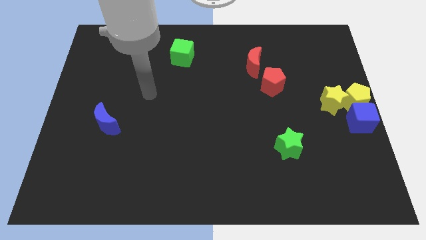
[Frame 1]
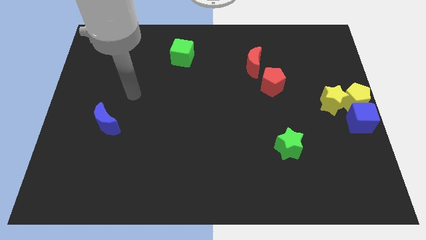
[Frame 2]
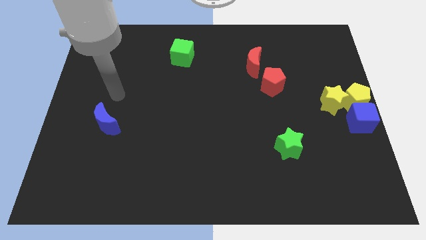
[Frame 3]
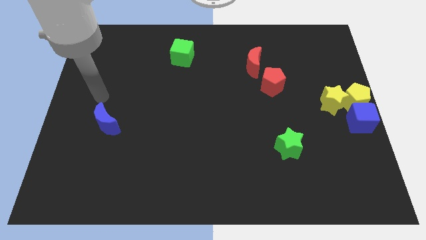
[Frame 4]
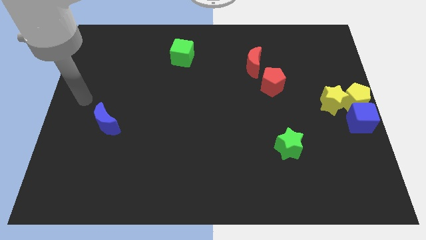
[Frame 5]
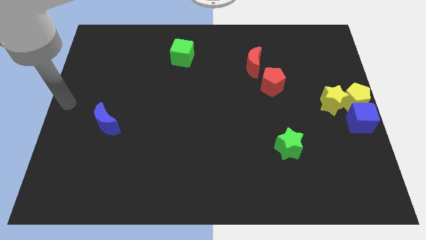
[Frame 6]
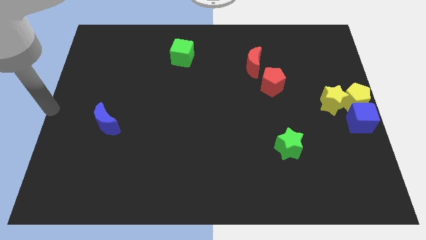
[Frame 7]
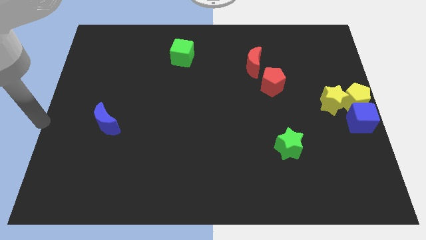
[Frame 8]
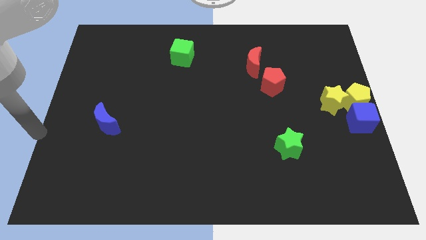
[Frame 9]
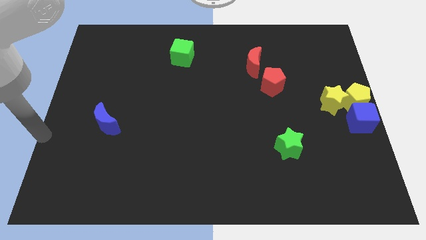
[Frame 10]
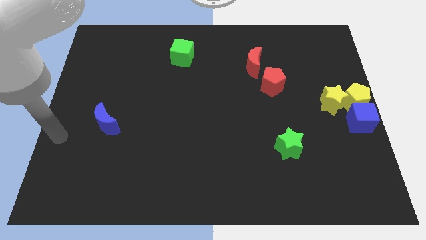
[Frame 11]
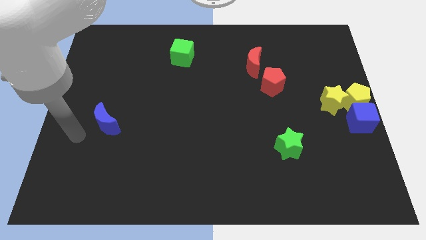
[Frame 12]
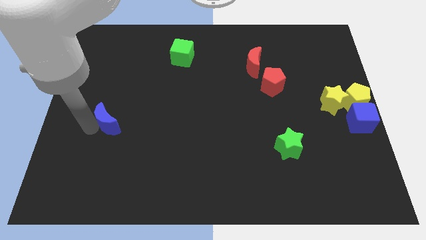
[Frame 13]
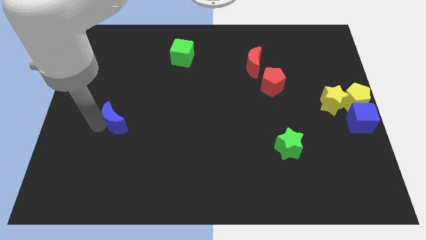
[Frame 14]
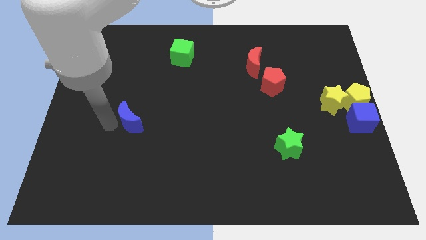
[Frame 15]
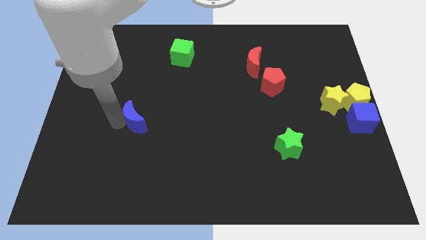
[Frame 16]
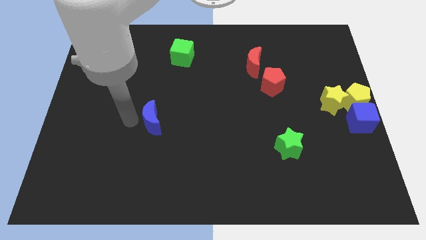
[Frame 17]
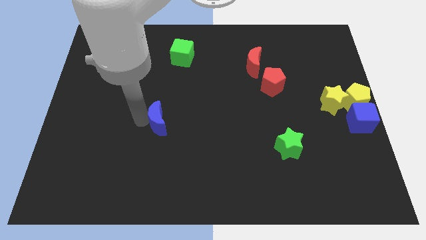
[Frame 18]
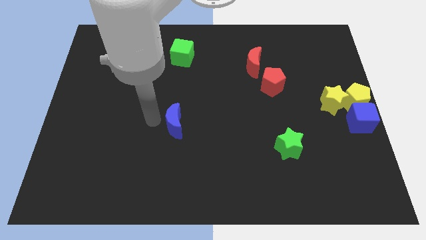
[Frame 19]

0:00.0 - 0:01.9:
place the blue moon vertically below the green cube

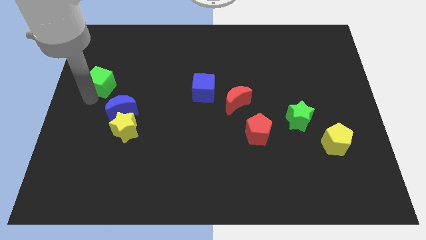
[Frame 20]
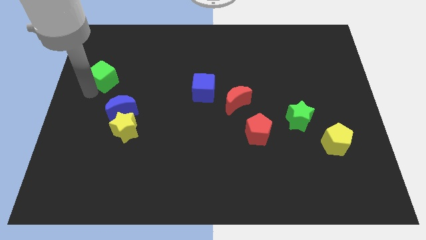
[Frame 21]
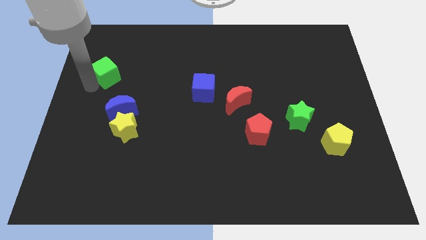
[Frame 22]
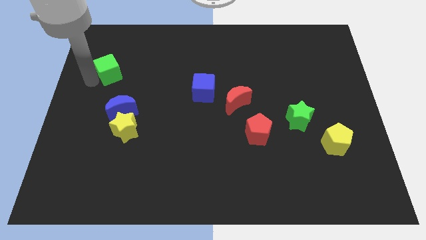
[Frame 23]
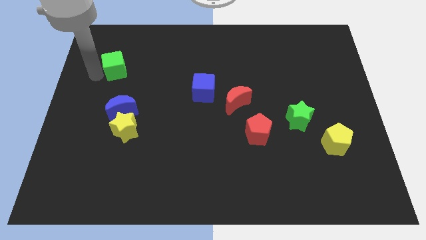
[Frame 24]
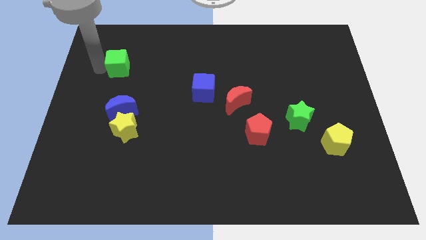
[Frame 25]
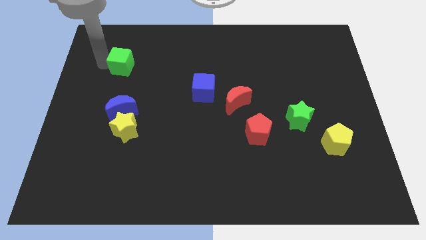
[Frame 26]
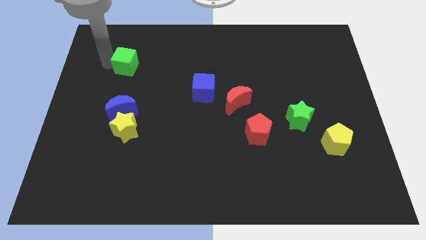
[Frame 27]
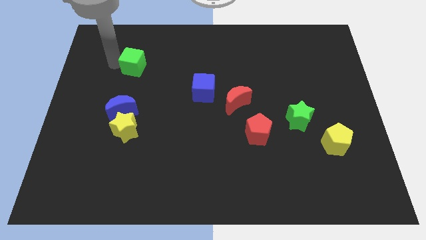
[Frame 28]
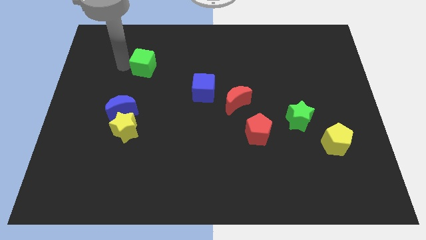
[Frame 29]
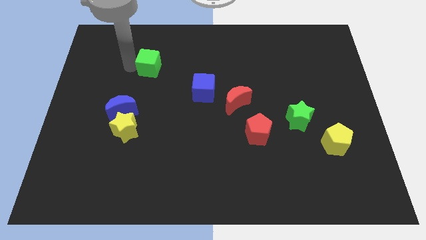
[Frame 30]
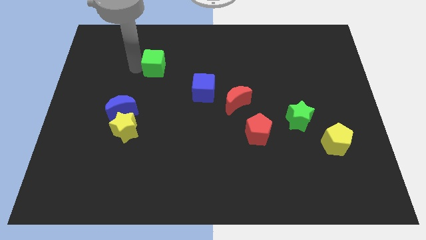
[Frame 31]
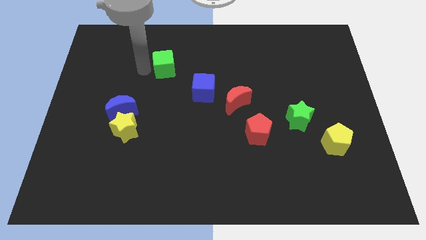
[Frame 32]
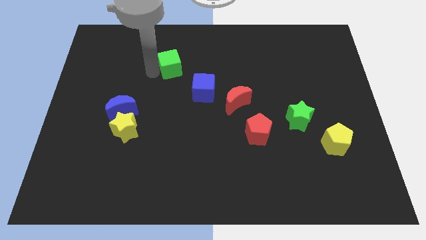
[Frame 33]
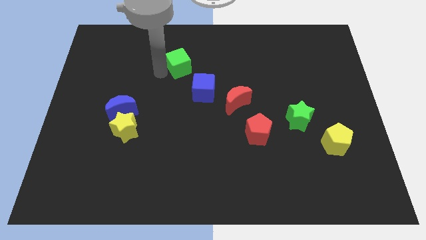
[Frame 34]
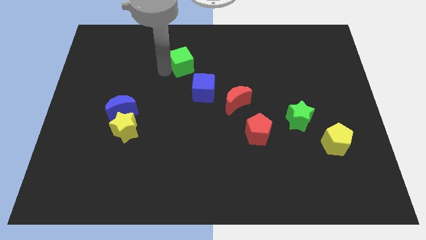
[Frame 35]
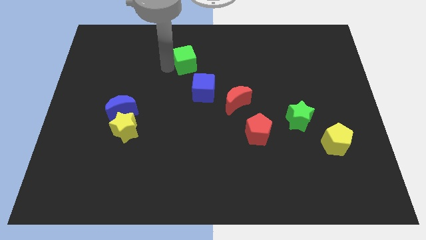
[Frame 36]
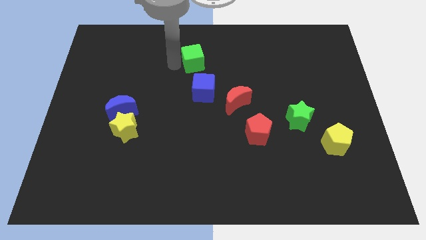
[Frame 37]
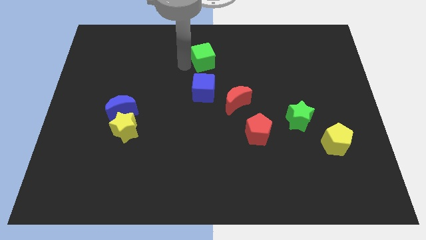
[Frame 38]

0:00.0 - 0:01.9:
push the green cube to top of the blue cube

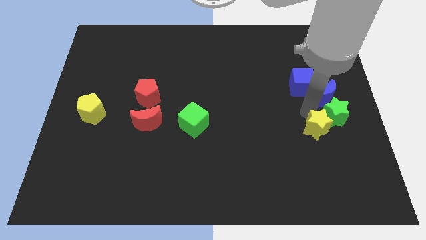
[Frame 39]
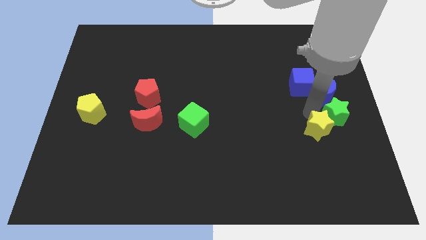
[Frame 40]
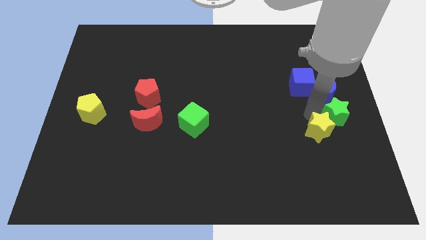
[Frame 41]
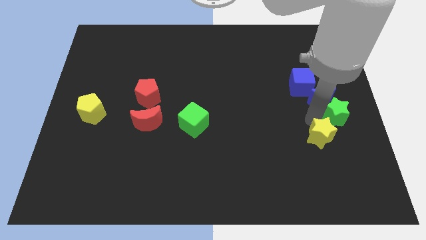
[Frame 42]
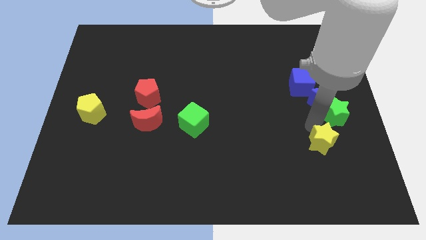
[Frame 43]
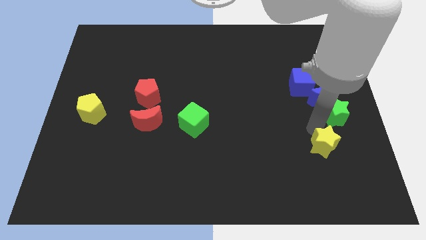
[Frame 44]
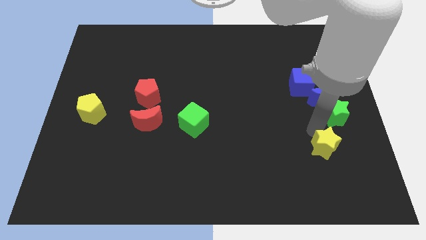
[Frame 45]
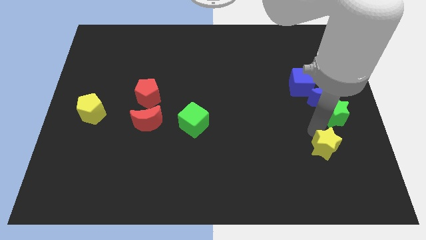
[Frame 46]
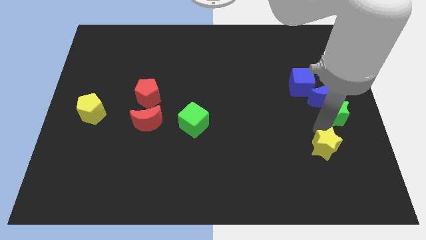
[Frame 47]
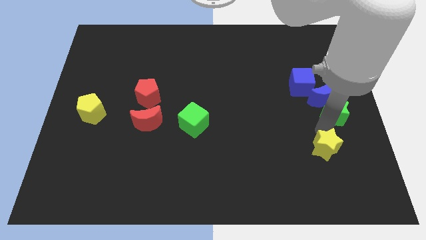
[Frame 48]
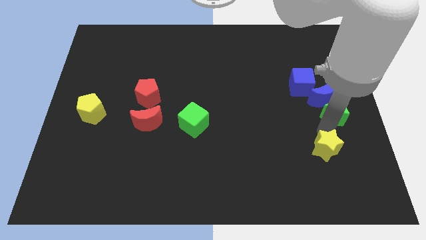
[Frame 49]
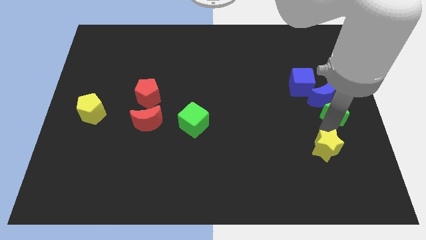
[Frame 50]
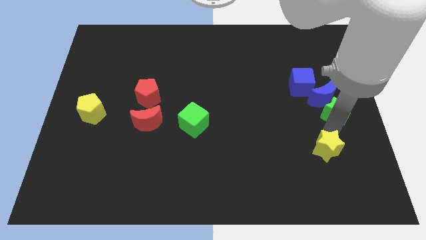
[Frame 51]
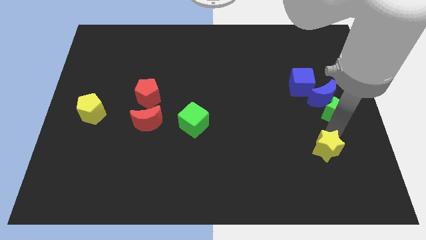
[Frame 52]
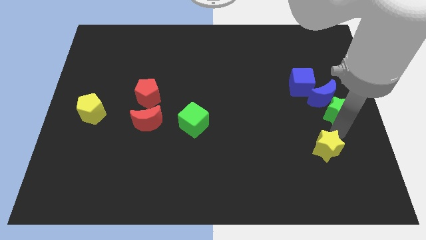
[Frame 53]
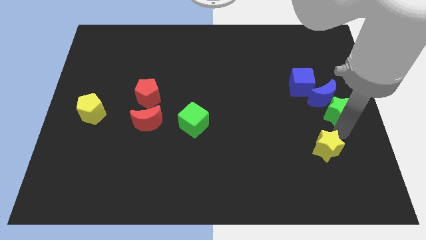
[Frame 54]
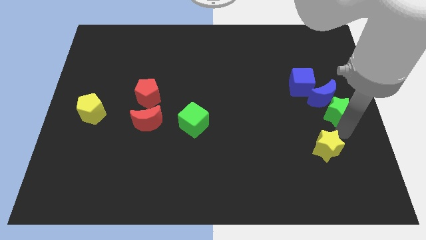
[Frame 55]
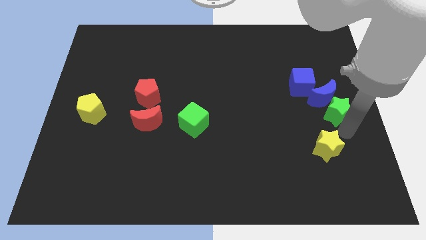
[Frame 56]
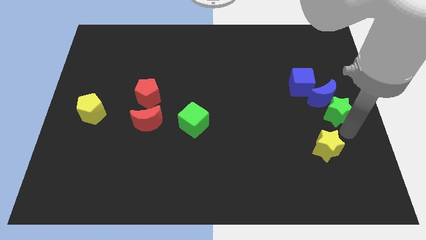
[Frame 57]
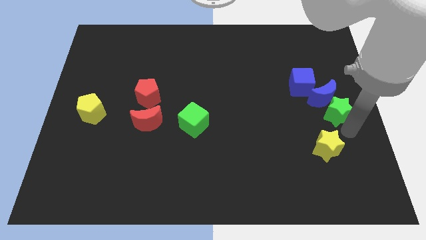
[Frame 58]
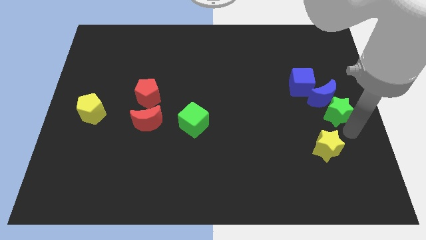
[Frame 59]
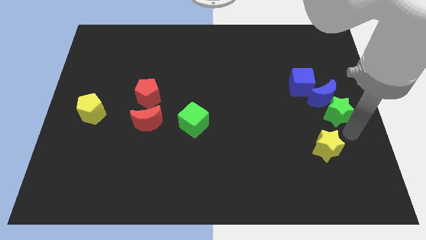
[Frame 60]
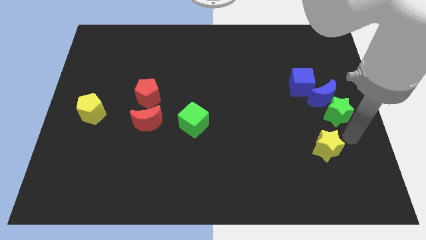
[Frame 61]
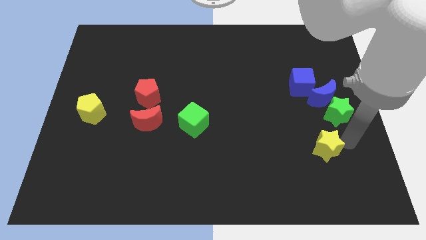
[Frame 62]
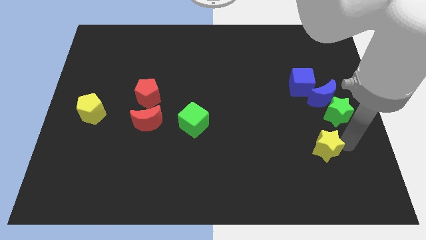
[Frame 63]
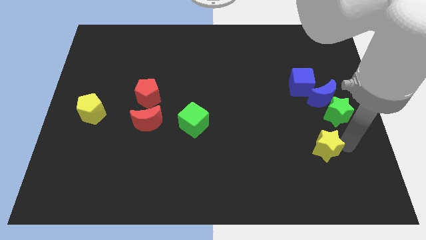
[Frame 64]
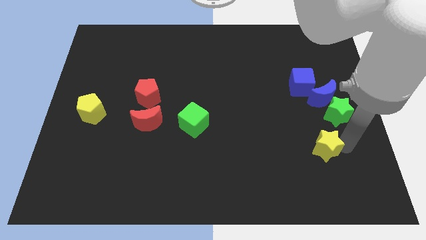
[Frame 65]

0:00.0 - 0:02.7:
separate the yellow star from the green star

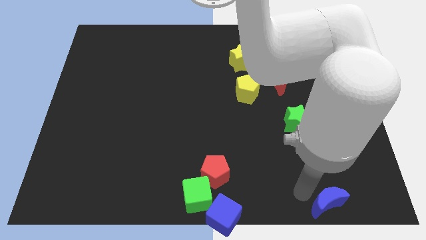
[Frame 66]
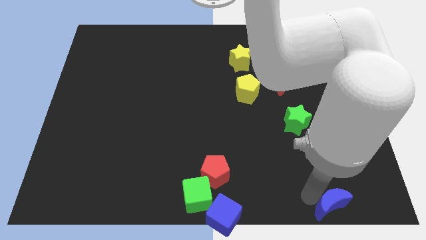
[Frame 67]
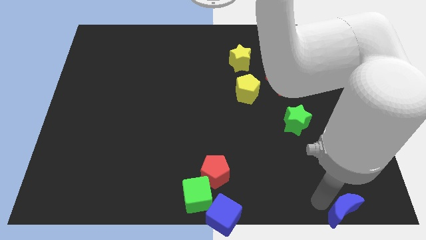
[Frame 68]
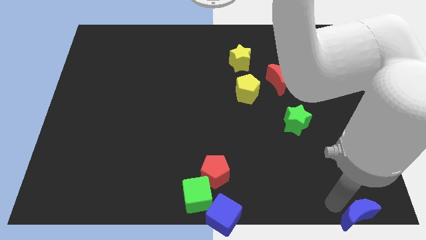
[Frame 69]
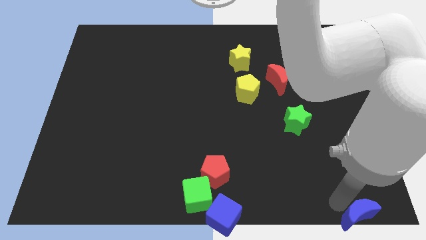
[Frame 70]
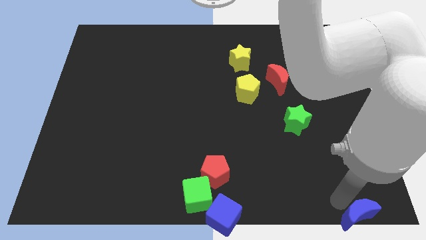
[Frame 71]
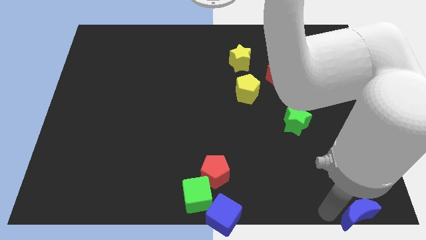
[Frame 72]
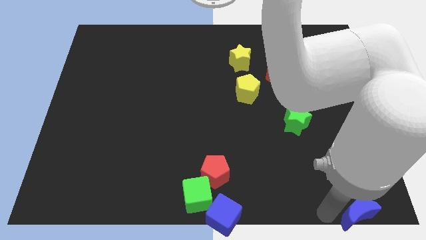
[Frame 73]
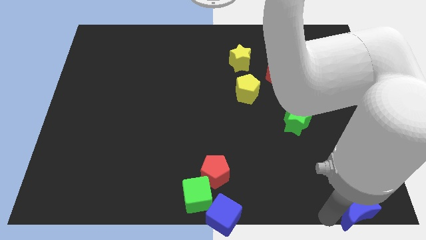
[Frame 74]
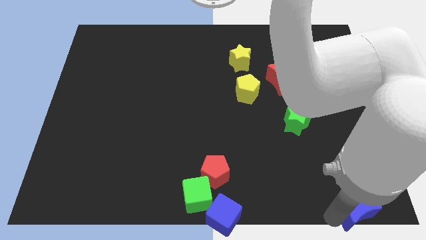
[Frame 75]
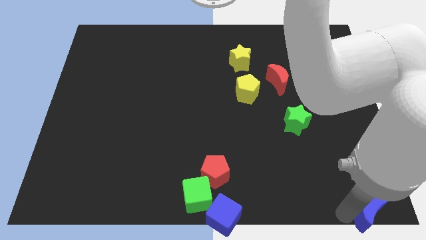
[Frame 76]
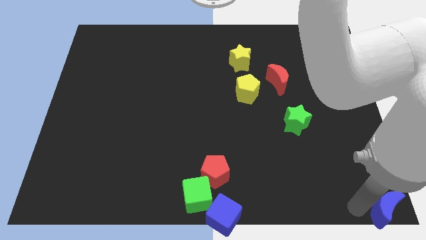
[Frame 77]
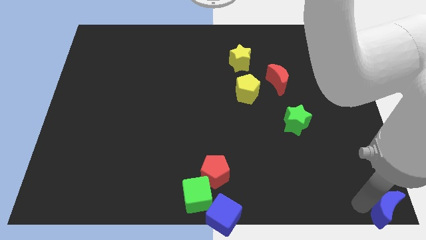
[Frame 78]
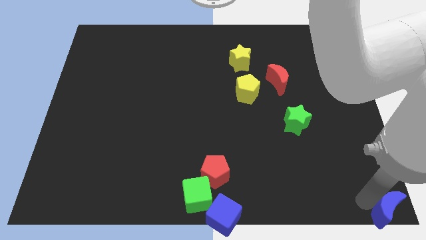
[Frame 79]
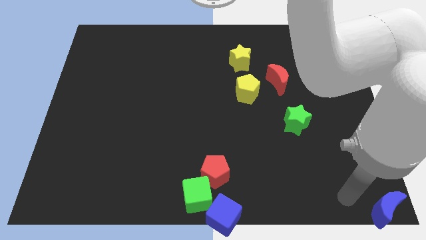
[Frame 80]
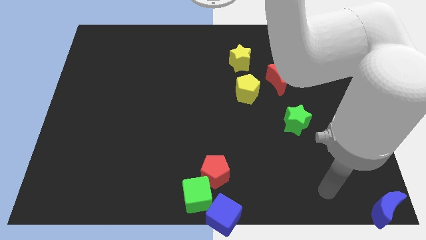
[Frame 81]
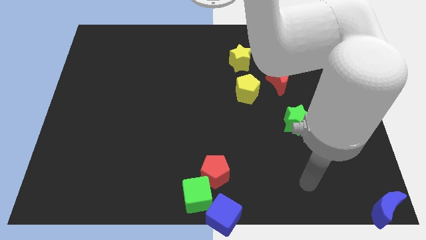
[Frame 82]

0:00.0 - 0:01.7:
push the blue crescent towards the bottom right of the board

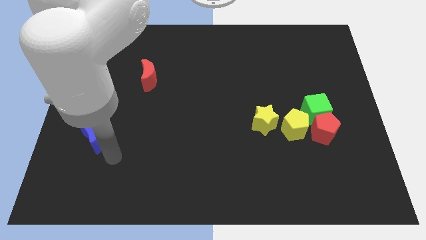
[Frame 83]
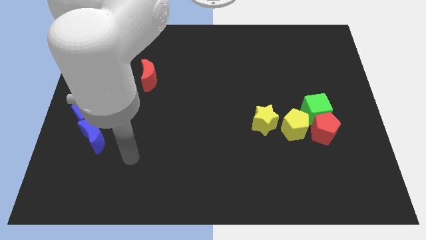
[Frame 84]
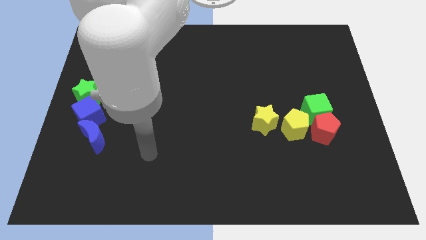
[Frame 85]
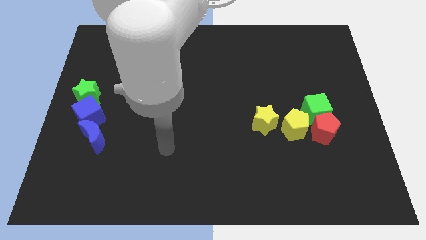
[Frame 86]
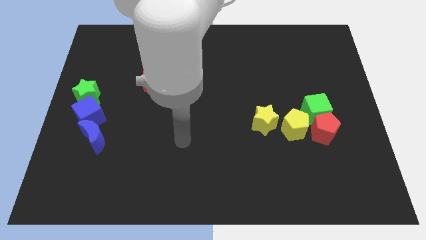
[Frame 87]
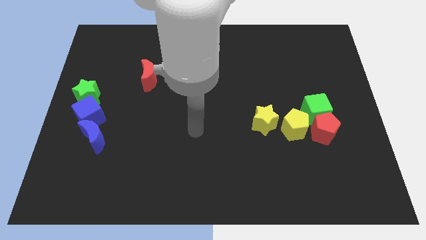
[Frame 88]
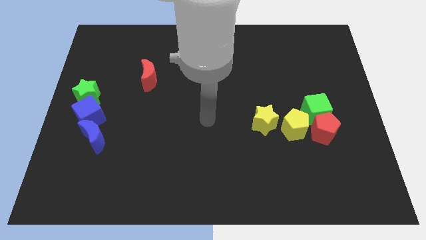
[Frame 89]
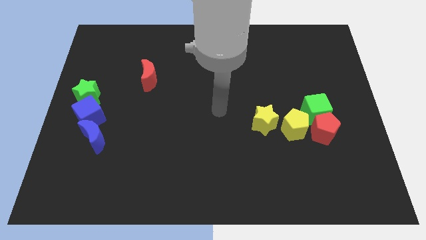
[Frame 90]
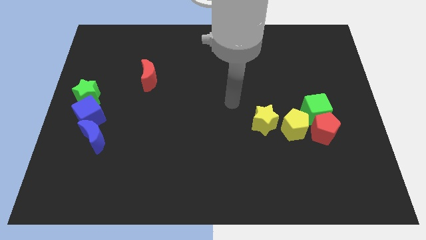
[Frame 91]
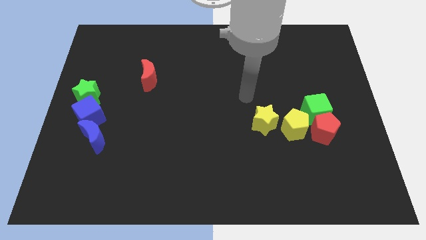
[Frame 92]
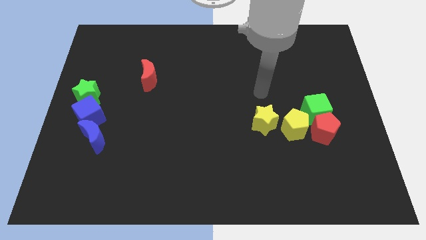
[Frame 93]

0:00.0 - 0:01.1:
point your arm at the top of the yellow star
